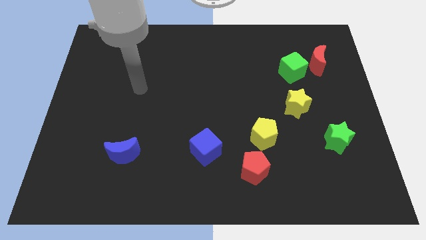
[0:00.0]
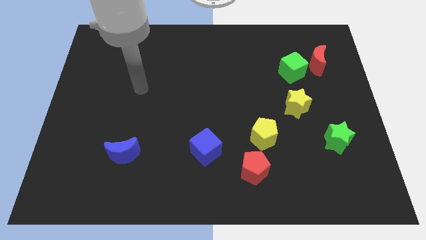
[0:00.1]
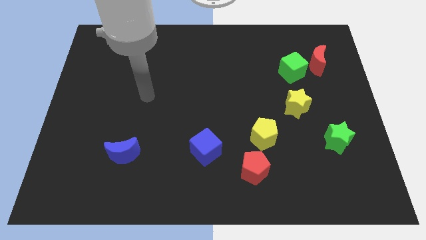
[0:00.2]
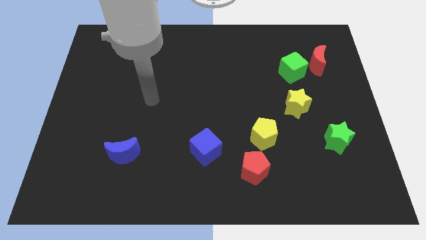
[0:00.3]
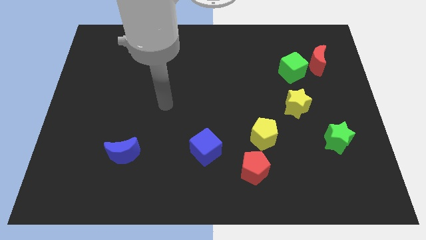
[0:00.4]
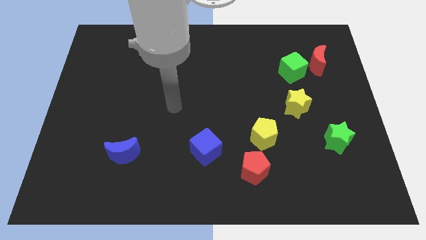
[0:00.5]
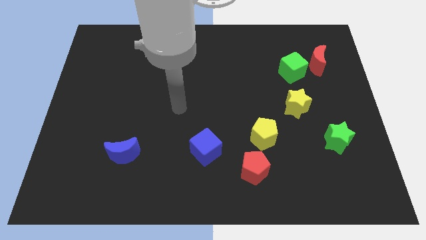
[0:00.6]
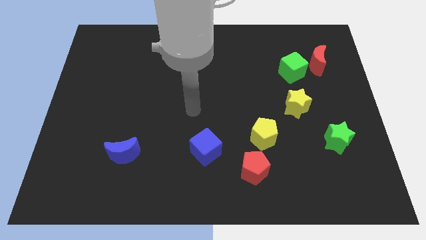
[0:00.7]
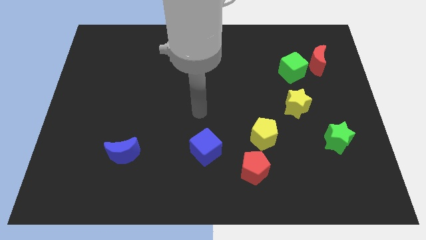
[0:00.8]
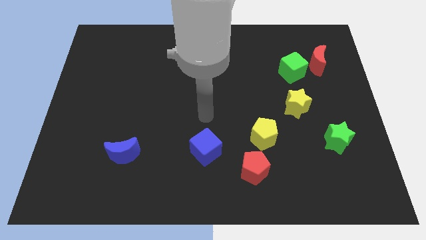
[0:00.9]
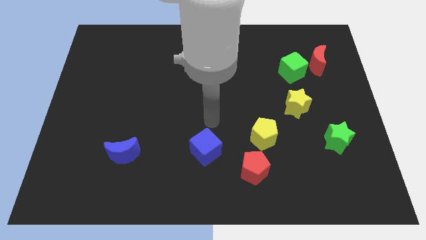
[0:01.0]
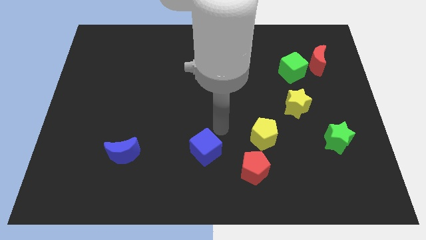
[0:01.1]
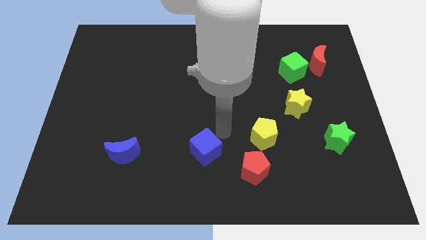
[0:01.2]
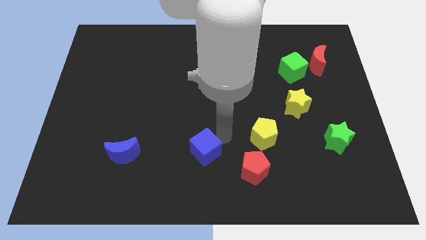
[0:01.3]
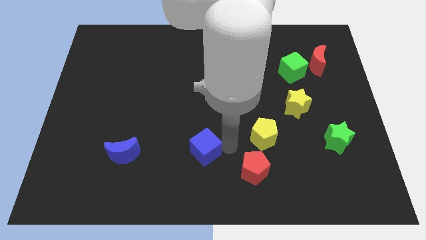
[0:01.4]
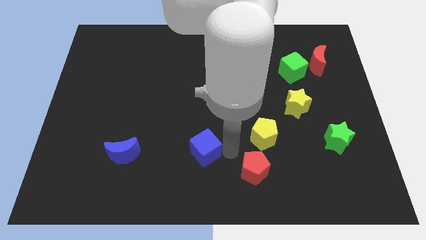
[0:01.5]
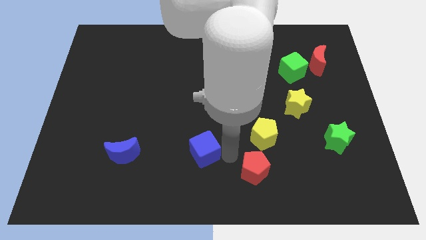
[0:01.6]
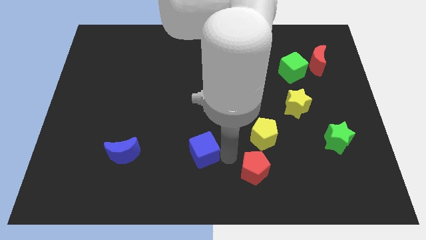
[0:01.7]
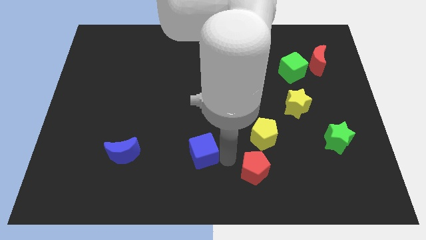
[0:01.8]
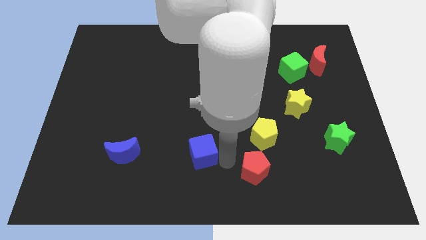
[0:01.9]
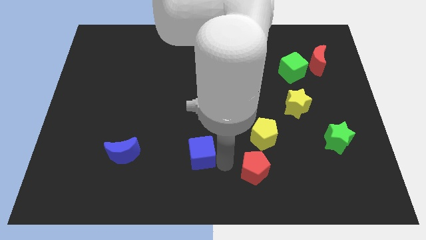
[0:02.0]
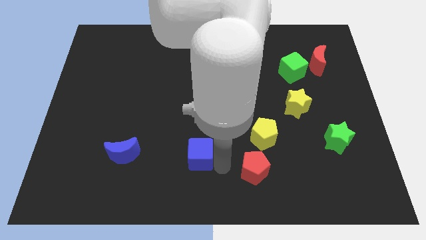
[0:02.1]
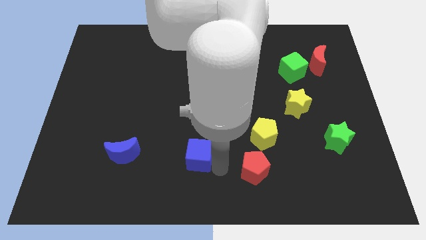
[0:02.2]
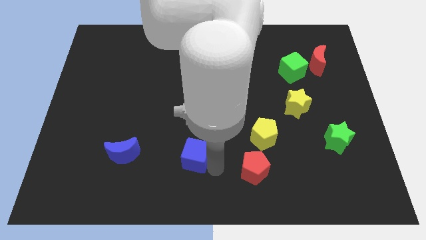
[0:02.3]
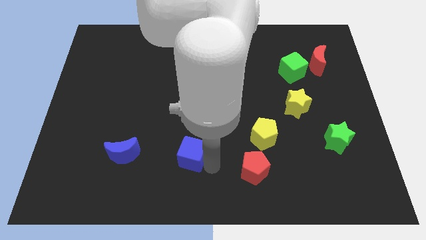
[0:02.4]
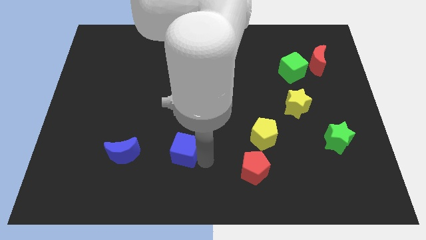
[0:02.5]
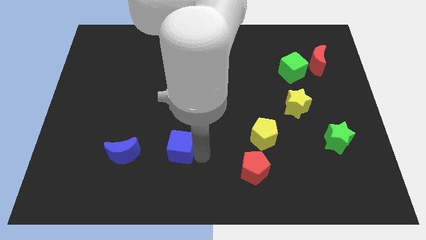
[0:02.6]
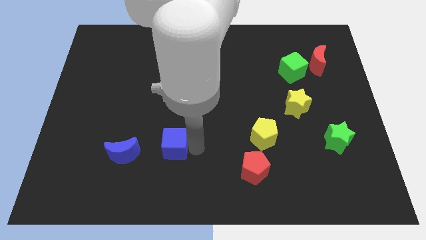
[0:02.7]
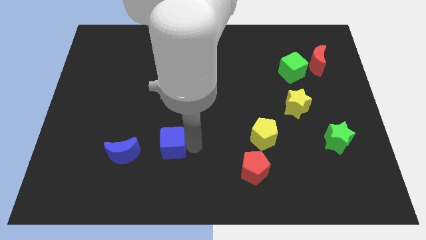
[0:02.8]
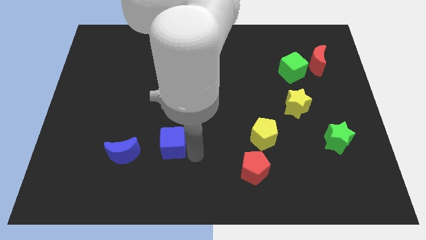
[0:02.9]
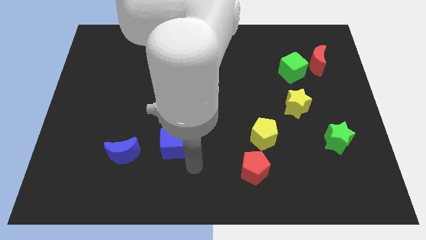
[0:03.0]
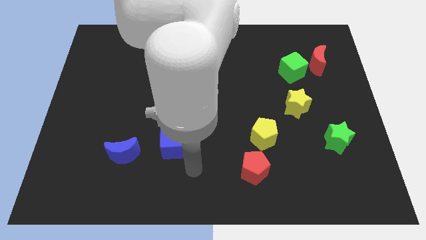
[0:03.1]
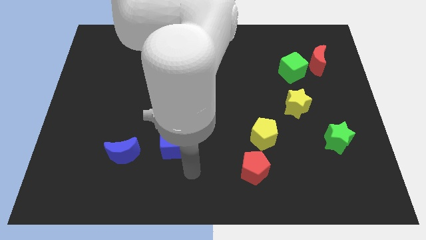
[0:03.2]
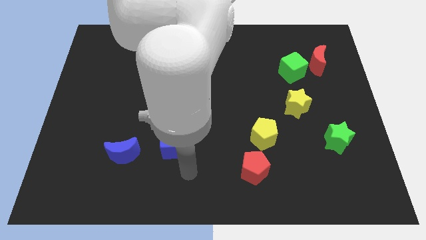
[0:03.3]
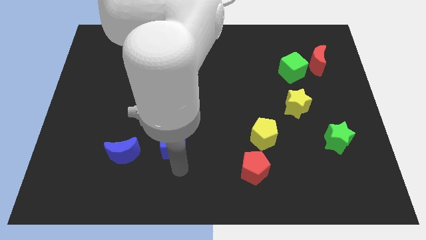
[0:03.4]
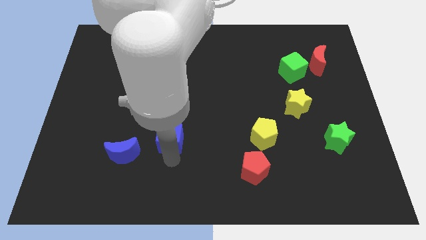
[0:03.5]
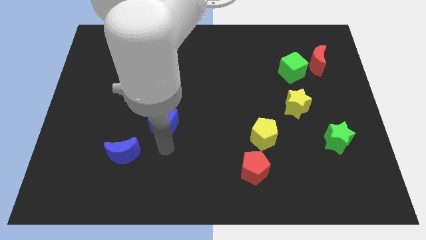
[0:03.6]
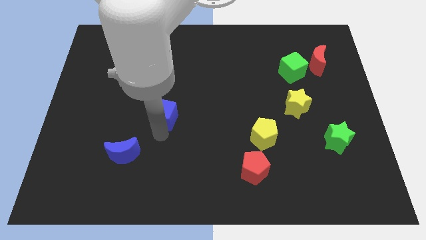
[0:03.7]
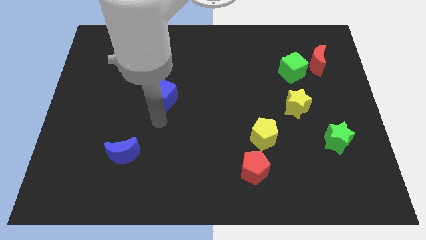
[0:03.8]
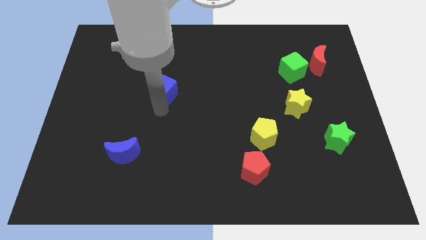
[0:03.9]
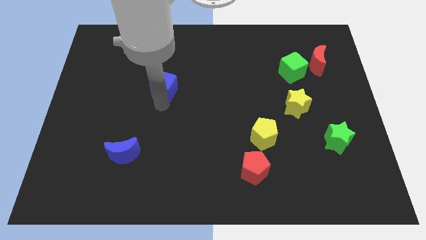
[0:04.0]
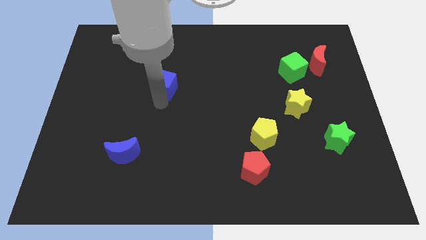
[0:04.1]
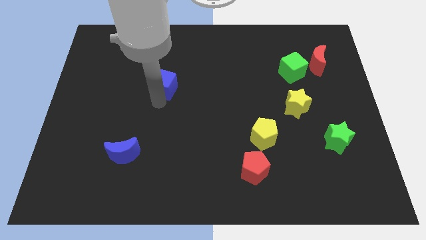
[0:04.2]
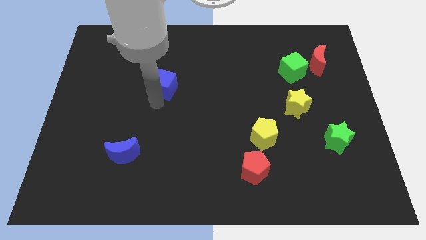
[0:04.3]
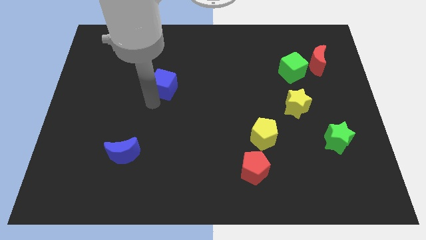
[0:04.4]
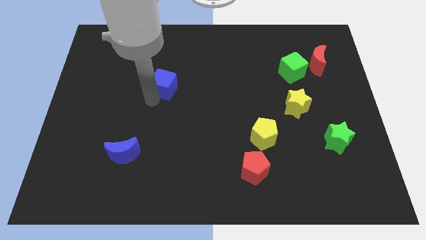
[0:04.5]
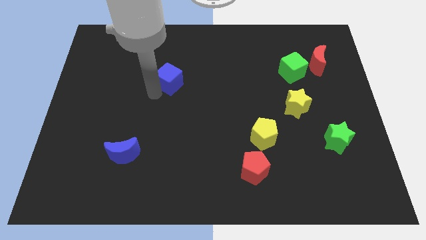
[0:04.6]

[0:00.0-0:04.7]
move the blue cube towards the top left of the board

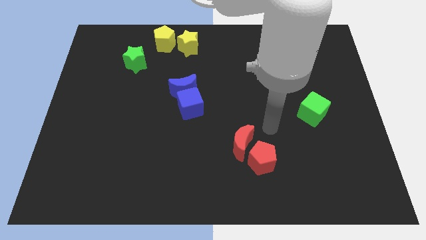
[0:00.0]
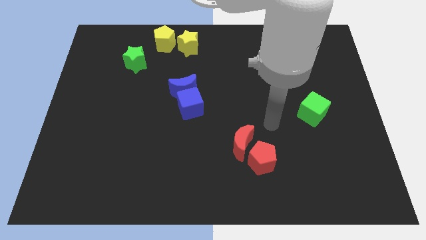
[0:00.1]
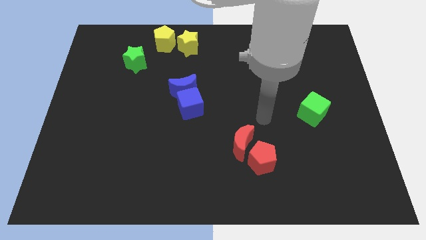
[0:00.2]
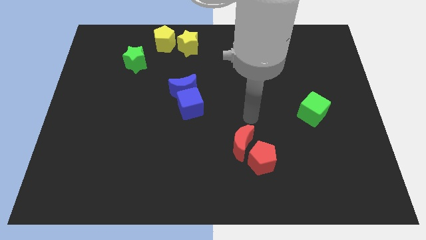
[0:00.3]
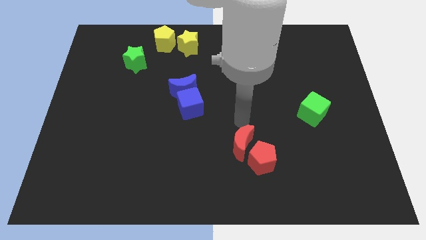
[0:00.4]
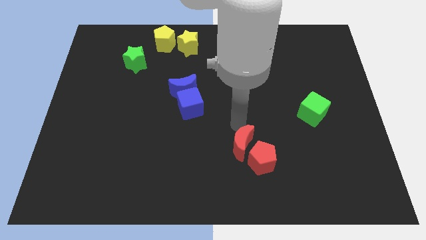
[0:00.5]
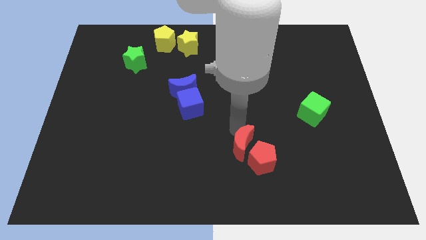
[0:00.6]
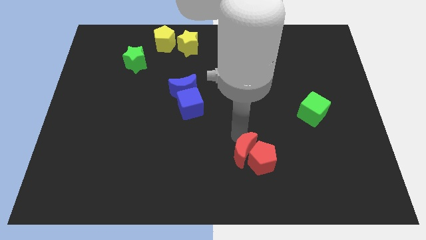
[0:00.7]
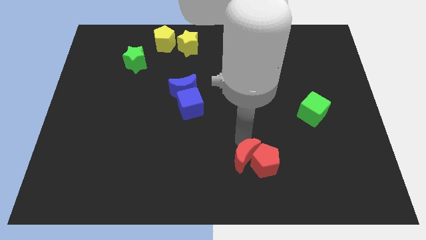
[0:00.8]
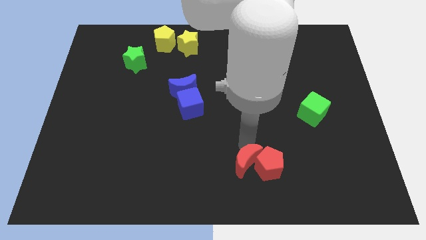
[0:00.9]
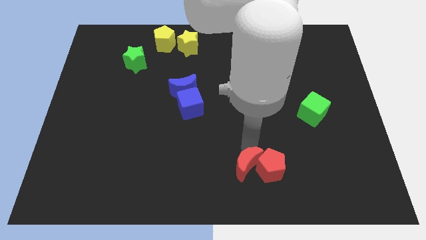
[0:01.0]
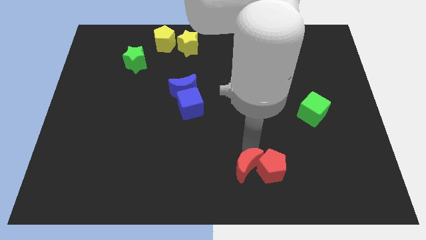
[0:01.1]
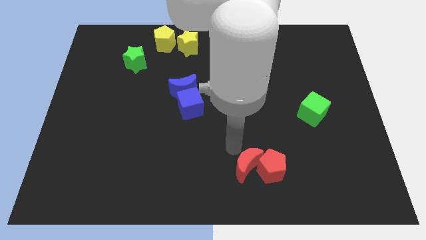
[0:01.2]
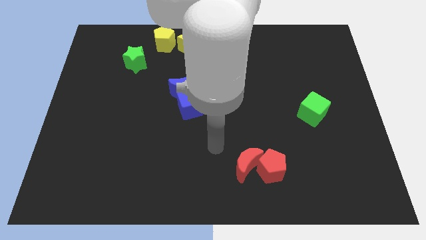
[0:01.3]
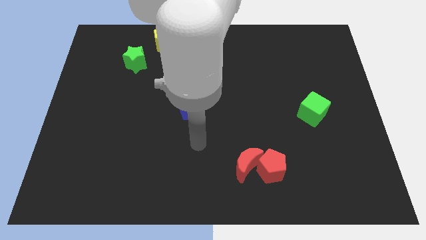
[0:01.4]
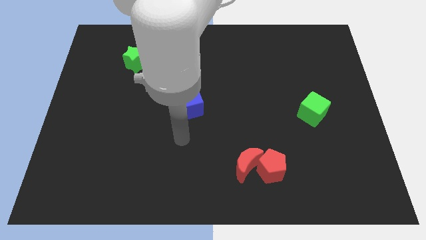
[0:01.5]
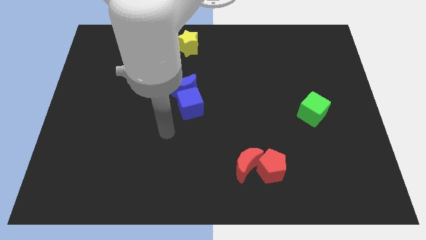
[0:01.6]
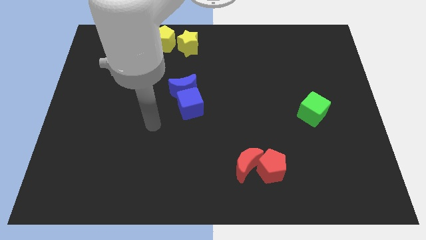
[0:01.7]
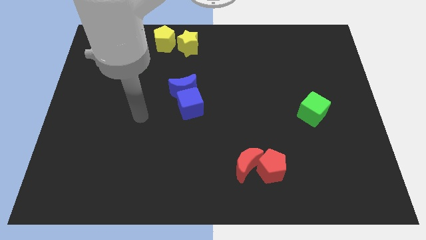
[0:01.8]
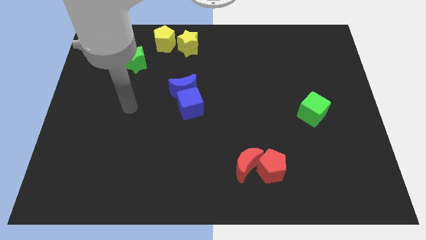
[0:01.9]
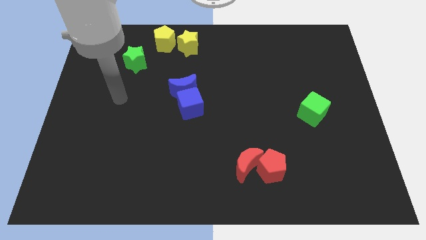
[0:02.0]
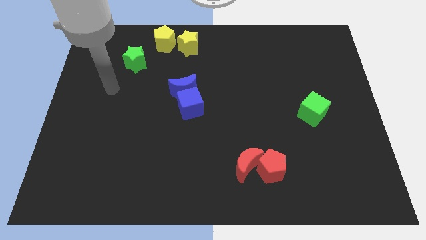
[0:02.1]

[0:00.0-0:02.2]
move red blocks slightly right

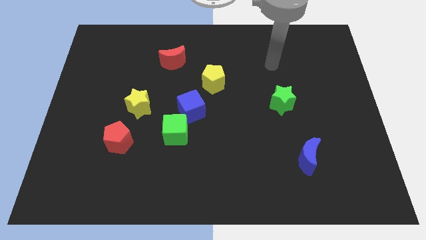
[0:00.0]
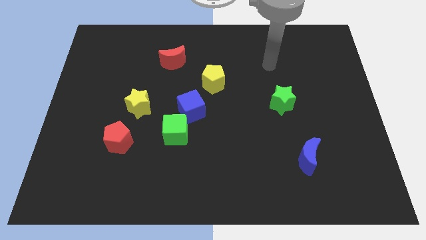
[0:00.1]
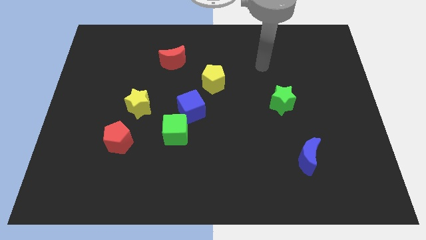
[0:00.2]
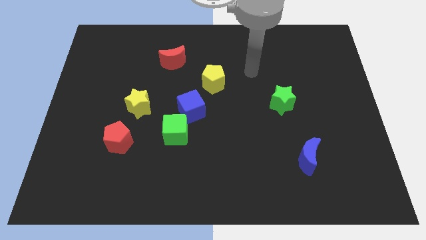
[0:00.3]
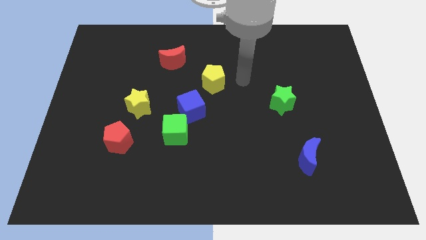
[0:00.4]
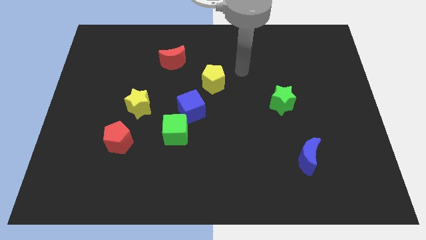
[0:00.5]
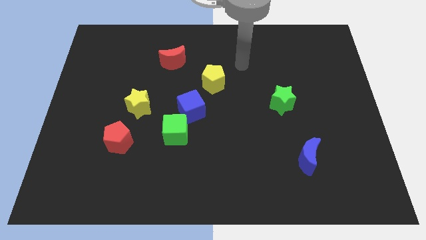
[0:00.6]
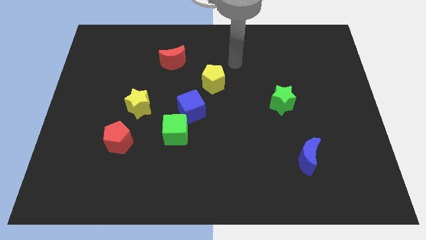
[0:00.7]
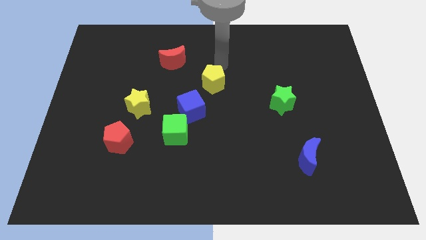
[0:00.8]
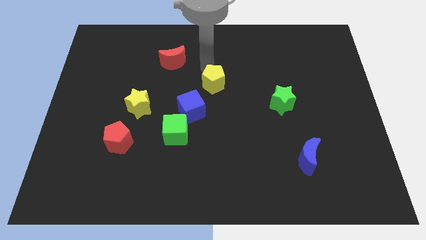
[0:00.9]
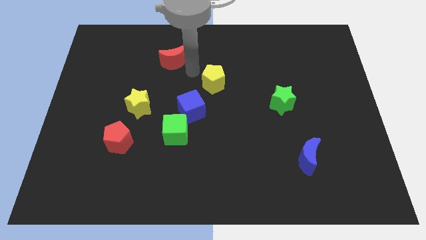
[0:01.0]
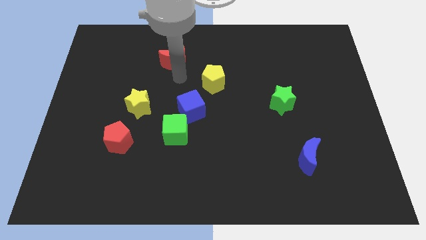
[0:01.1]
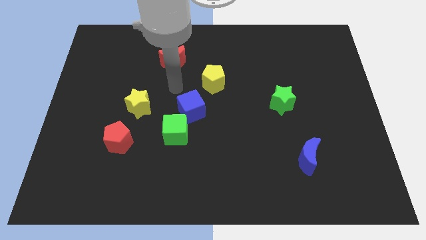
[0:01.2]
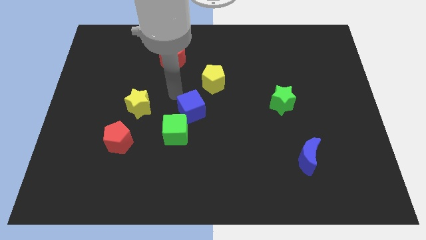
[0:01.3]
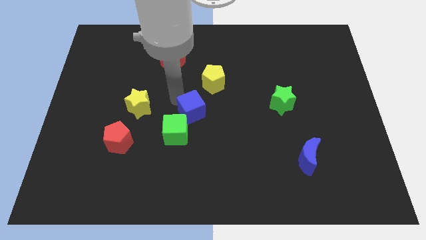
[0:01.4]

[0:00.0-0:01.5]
move your arm towards blue cube

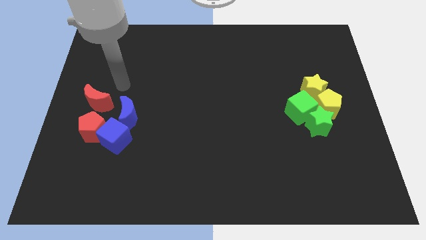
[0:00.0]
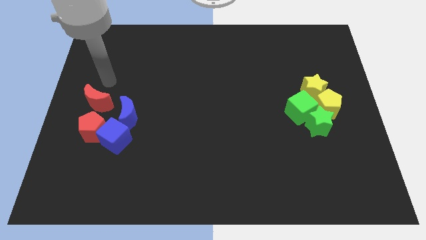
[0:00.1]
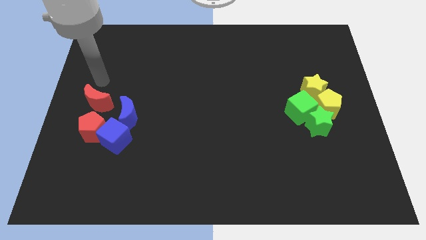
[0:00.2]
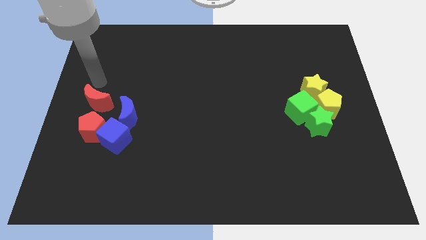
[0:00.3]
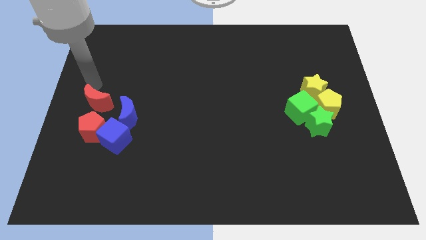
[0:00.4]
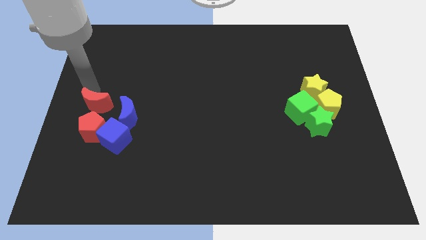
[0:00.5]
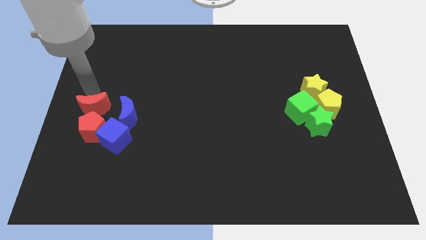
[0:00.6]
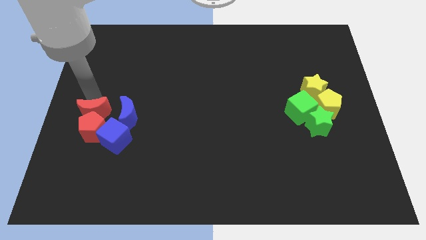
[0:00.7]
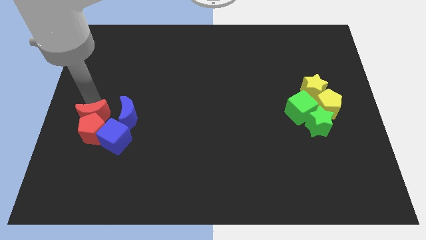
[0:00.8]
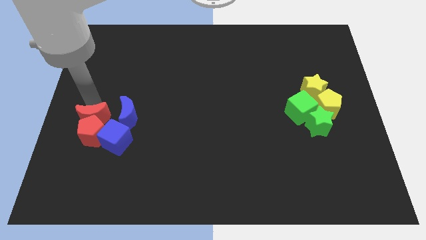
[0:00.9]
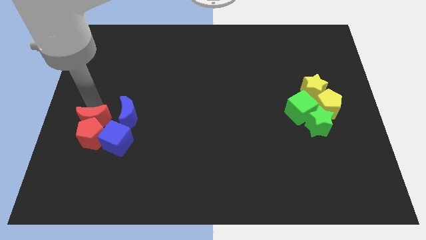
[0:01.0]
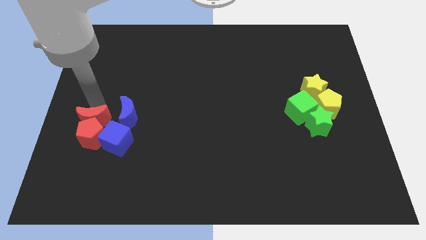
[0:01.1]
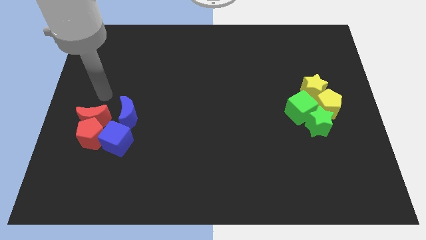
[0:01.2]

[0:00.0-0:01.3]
push the red crescent along with the red pentagon slightly bottom of the board
